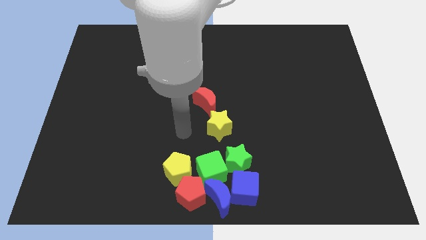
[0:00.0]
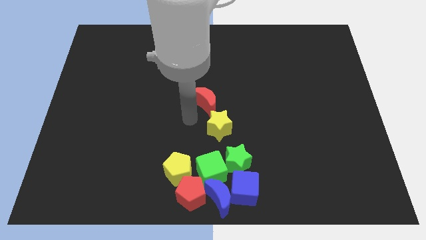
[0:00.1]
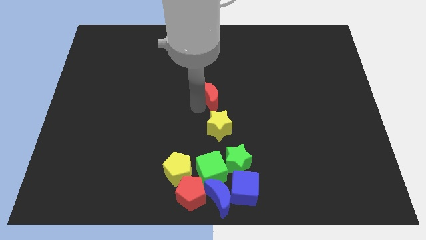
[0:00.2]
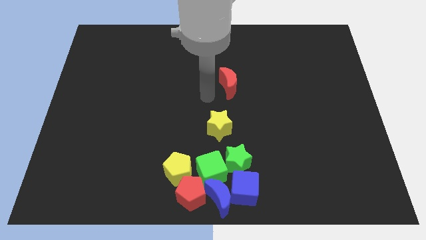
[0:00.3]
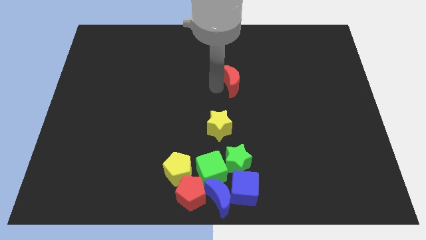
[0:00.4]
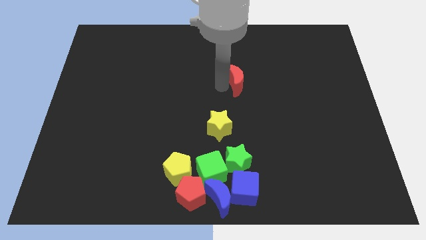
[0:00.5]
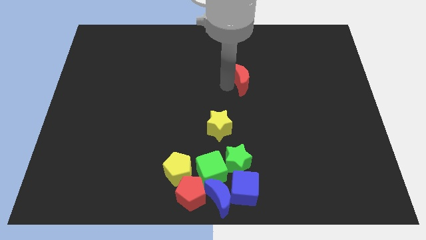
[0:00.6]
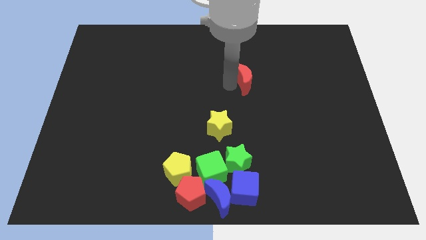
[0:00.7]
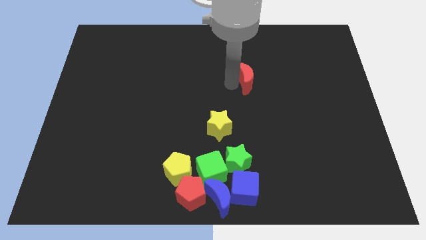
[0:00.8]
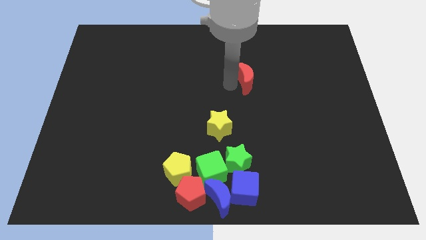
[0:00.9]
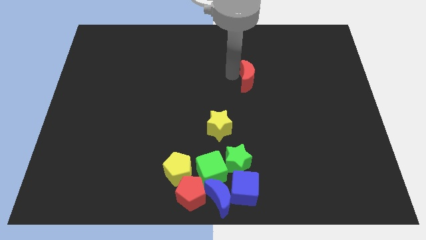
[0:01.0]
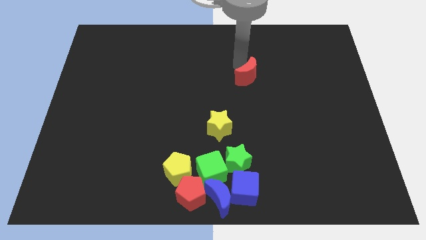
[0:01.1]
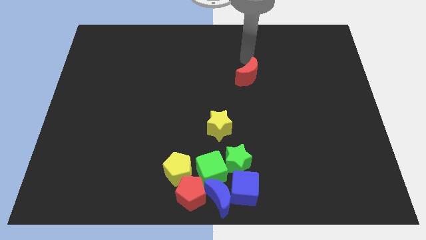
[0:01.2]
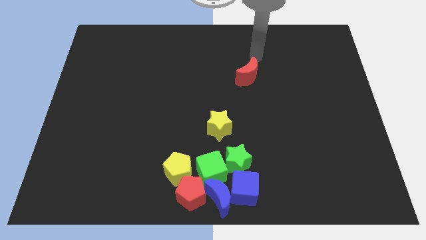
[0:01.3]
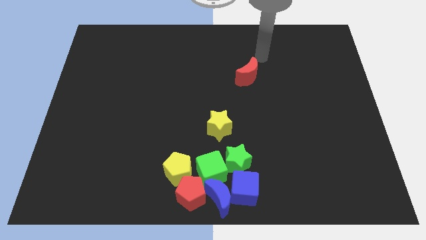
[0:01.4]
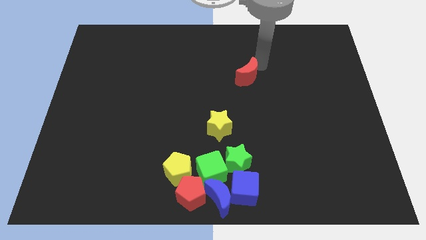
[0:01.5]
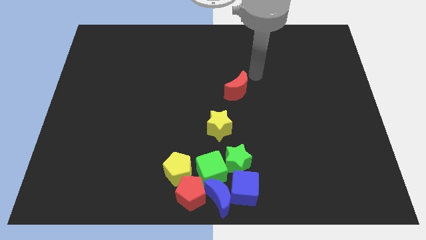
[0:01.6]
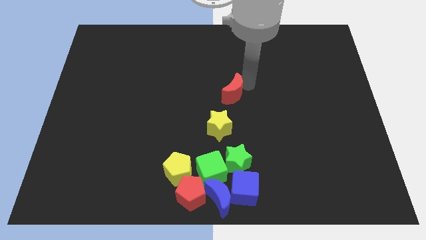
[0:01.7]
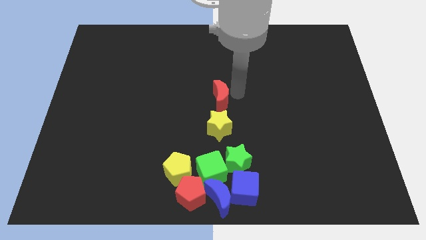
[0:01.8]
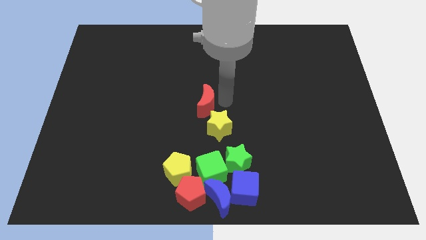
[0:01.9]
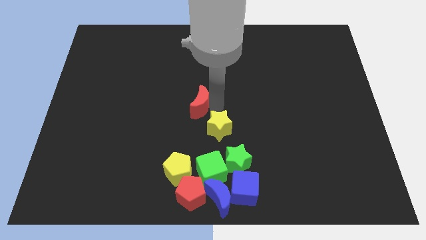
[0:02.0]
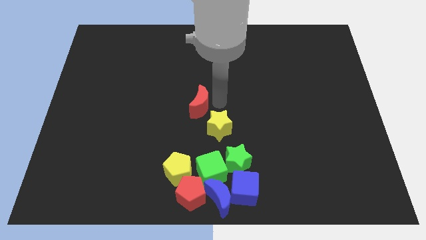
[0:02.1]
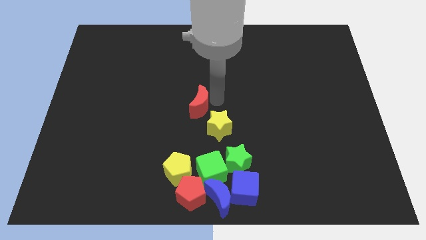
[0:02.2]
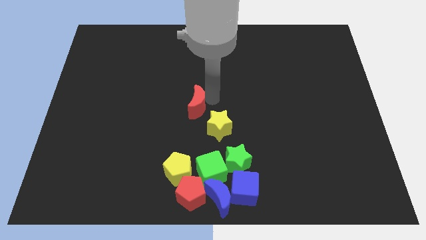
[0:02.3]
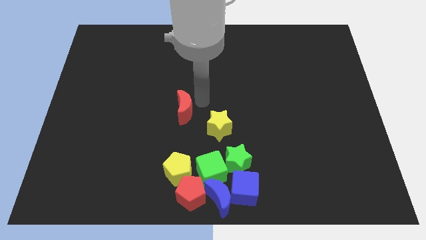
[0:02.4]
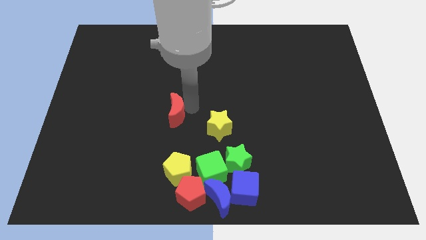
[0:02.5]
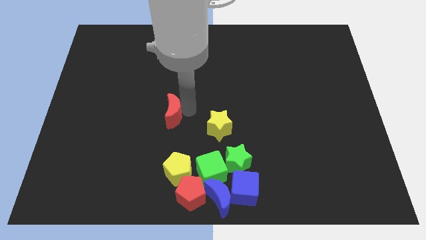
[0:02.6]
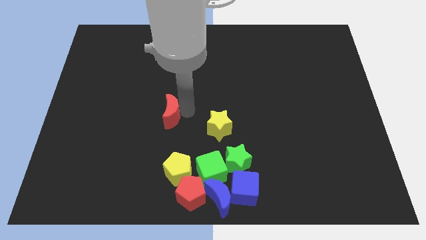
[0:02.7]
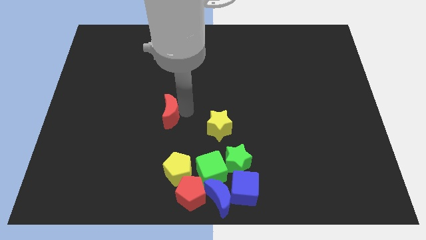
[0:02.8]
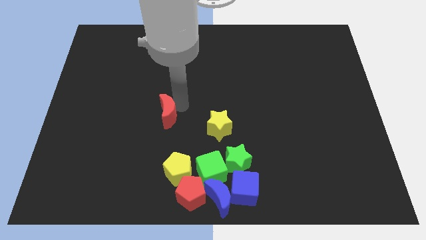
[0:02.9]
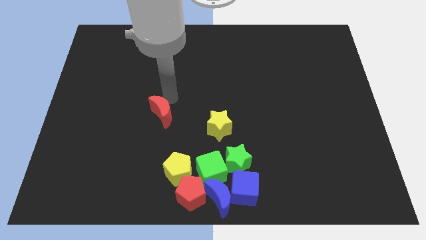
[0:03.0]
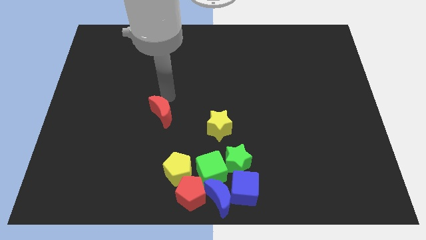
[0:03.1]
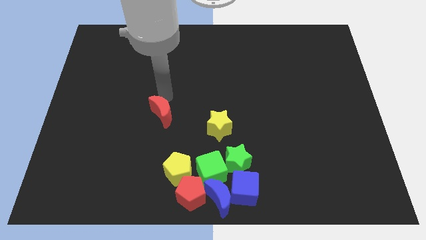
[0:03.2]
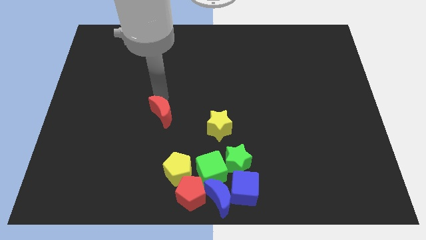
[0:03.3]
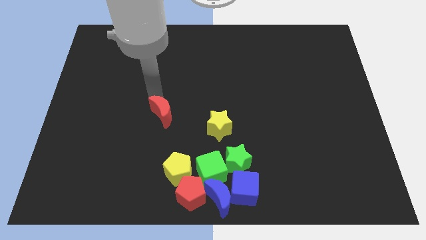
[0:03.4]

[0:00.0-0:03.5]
place the red crescent at the top side of the yellow pentagon

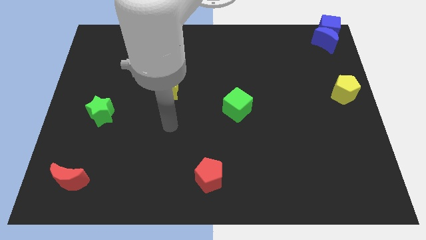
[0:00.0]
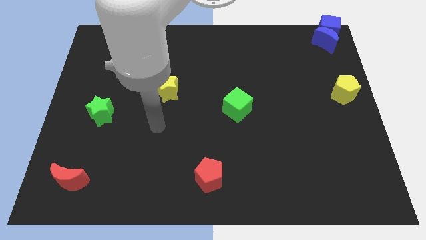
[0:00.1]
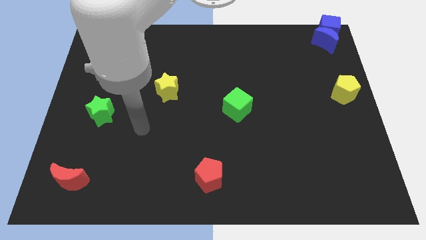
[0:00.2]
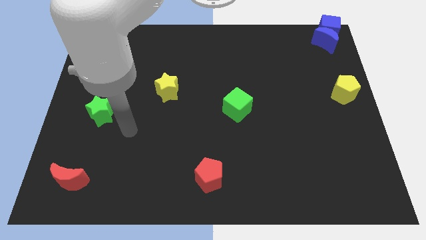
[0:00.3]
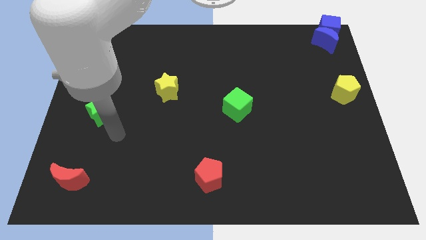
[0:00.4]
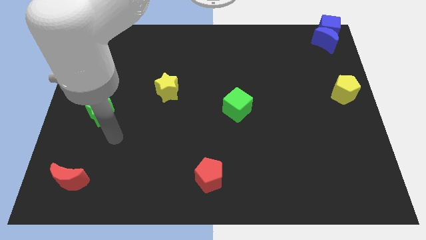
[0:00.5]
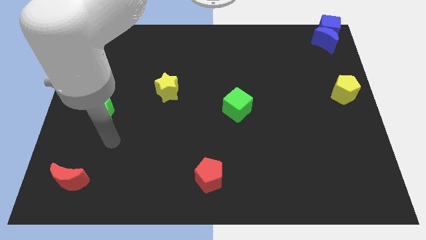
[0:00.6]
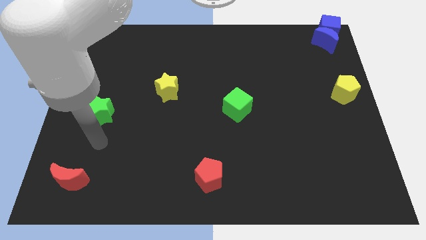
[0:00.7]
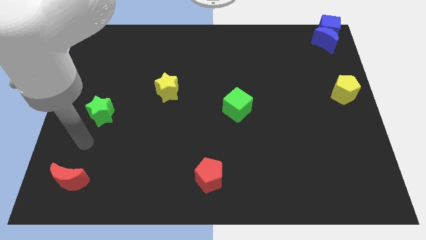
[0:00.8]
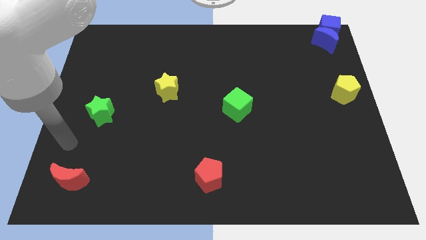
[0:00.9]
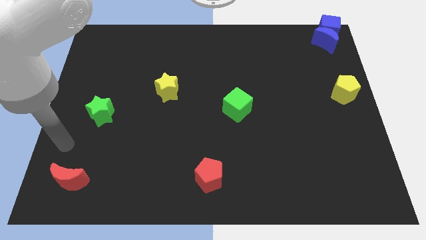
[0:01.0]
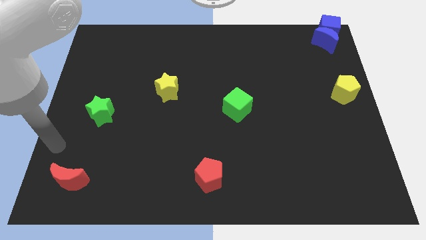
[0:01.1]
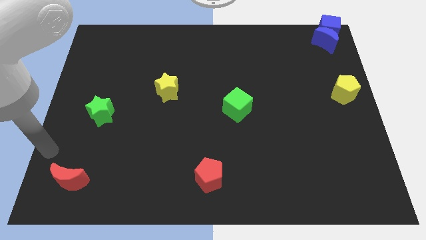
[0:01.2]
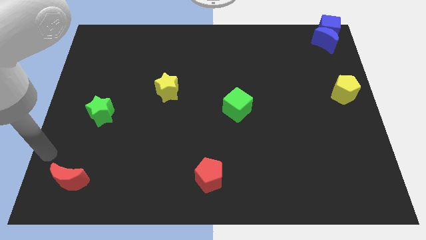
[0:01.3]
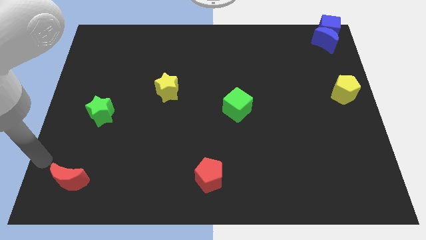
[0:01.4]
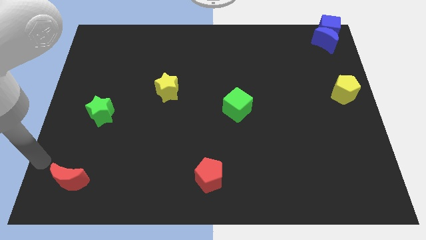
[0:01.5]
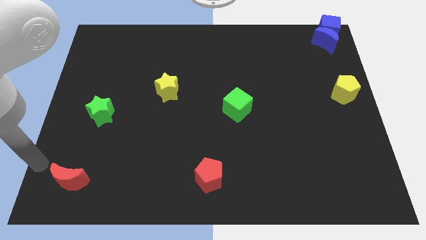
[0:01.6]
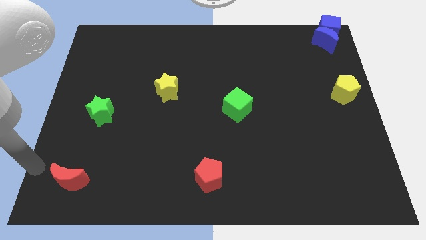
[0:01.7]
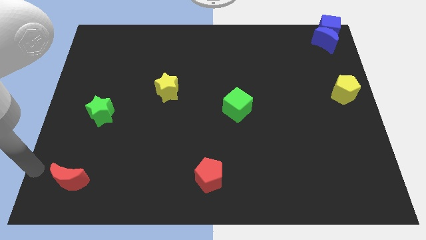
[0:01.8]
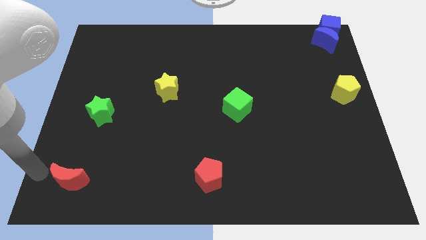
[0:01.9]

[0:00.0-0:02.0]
move your arm to the left of red moon

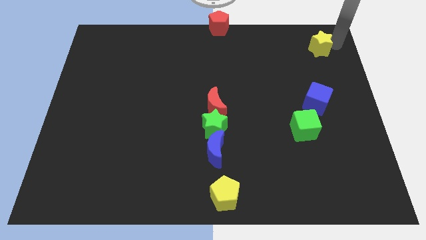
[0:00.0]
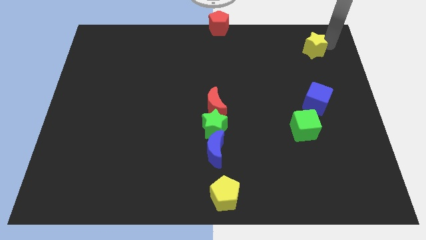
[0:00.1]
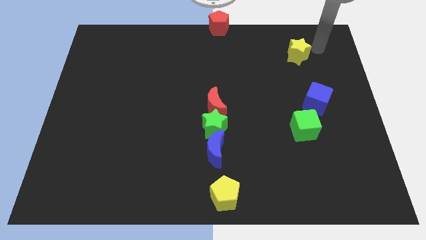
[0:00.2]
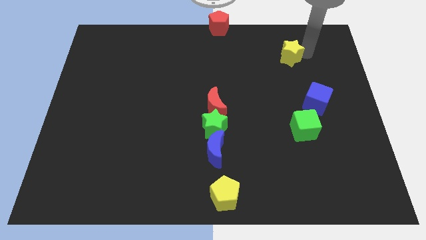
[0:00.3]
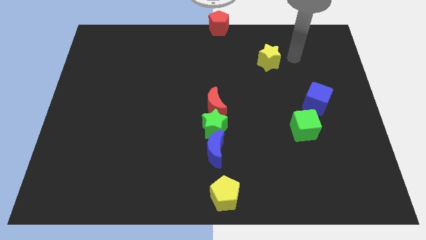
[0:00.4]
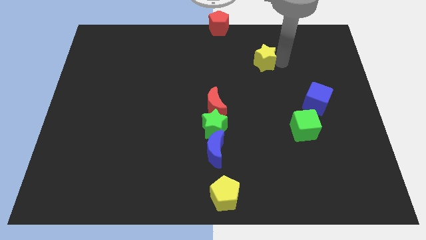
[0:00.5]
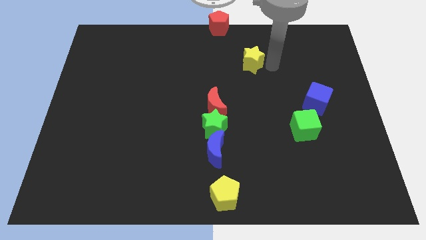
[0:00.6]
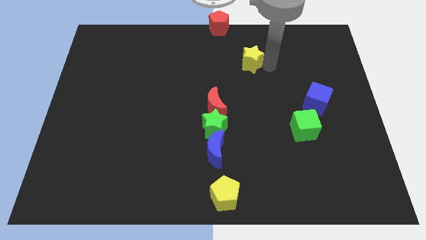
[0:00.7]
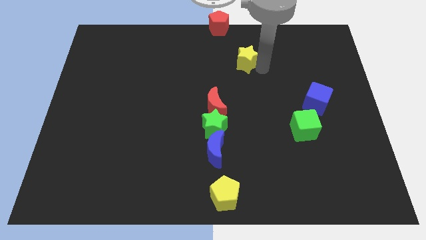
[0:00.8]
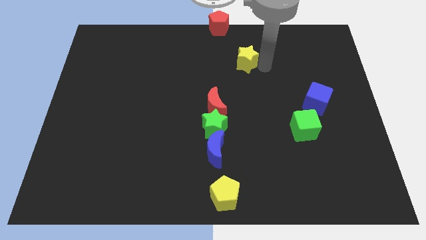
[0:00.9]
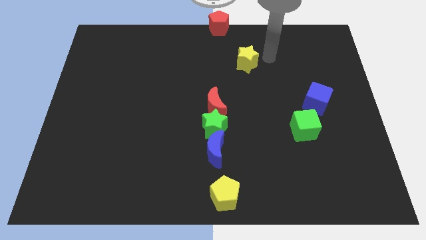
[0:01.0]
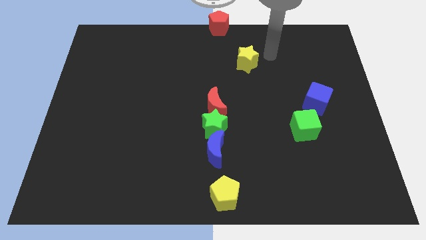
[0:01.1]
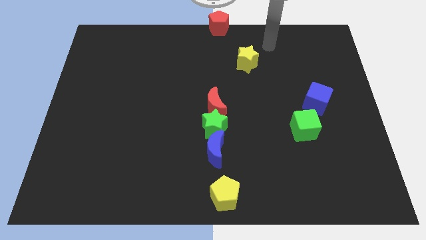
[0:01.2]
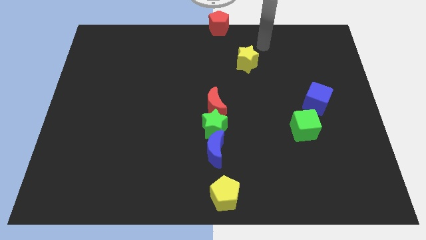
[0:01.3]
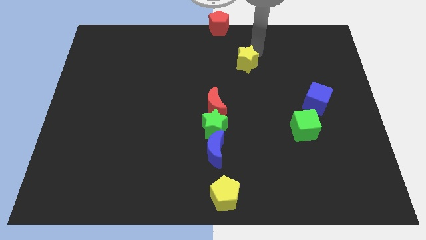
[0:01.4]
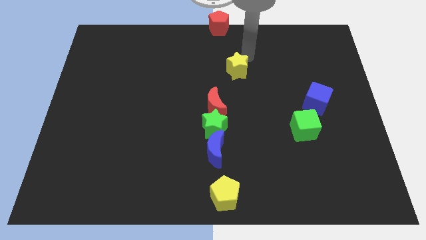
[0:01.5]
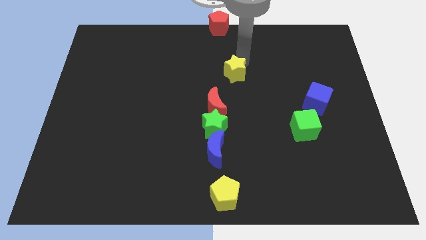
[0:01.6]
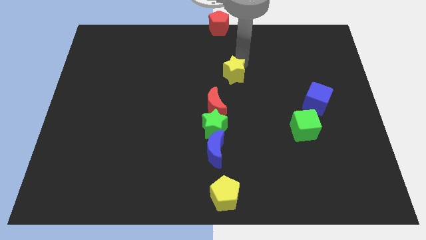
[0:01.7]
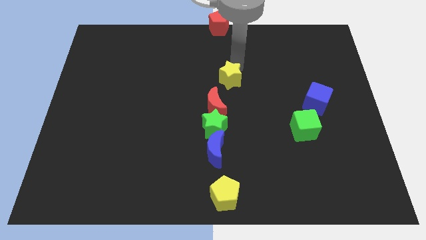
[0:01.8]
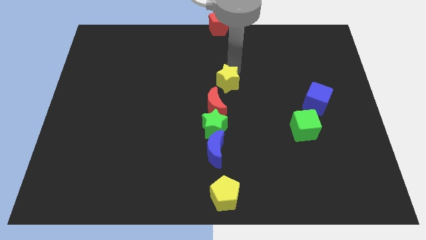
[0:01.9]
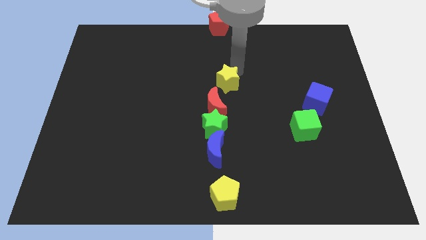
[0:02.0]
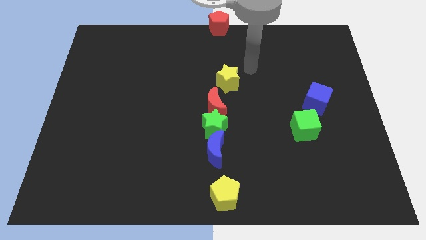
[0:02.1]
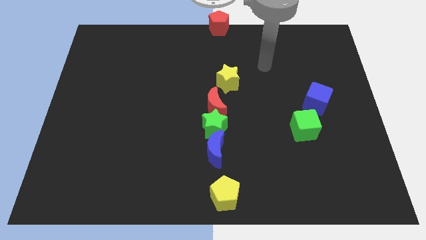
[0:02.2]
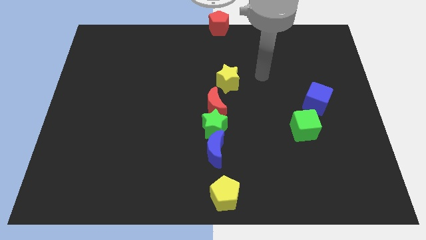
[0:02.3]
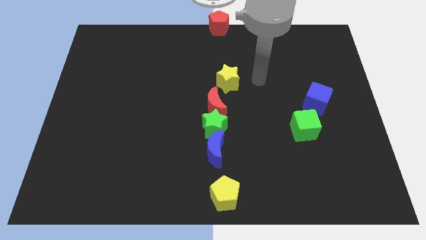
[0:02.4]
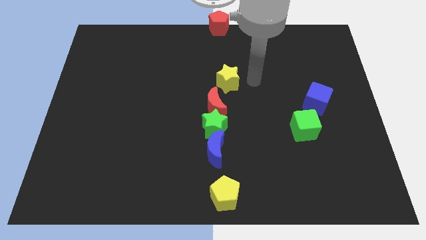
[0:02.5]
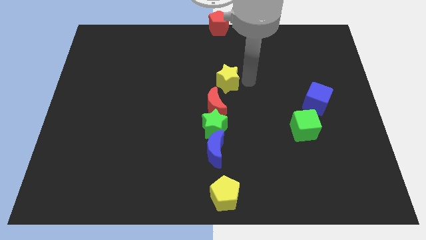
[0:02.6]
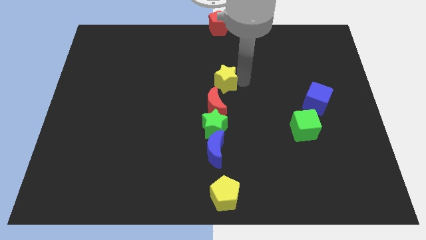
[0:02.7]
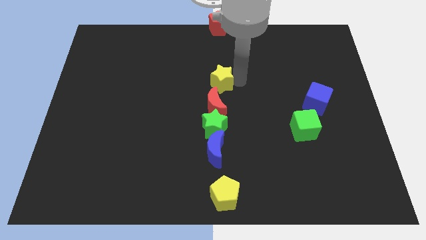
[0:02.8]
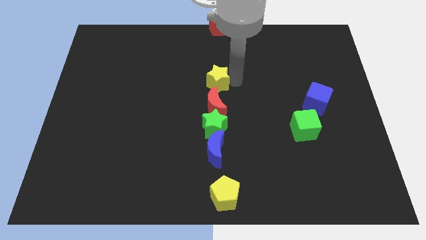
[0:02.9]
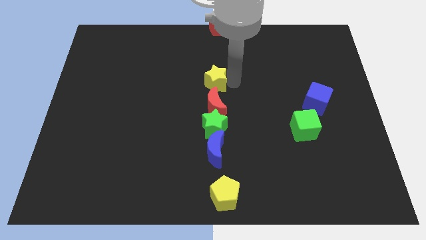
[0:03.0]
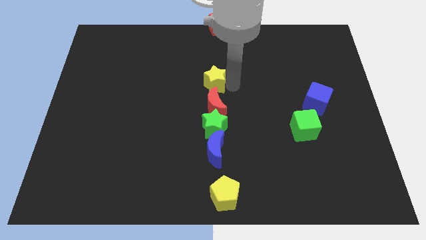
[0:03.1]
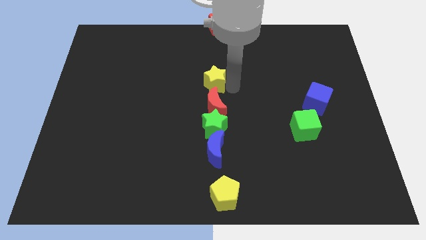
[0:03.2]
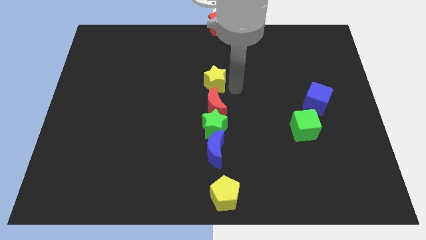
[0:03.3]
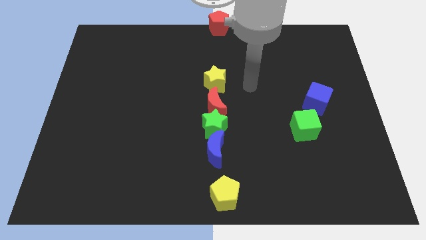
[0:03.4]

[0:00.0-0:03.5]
drag the yellow star above the red moon

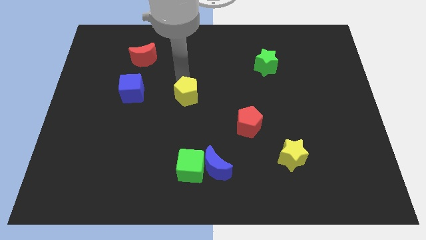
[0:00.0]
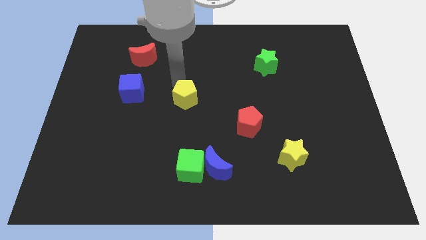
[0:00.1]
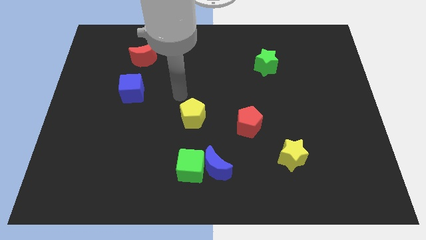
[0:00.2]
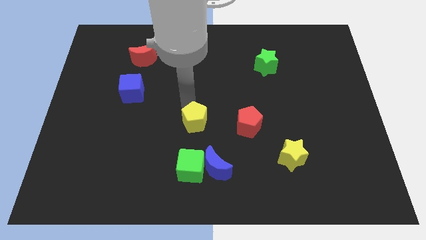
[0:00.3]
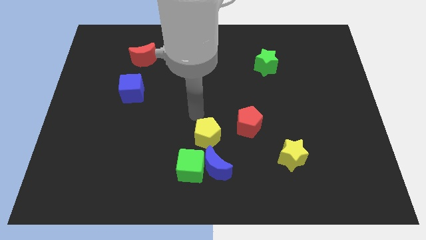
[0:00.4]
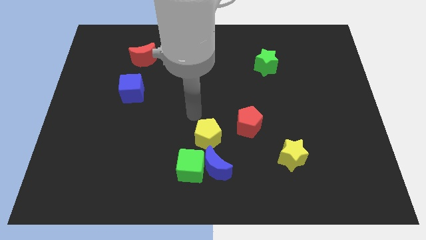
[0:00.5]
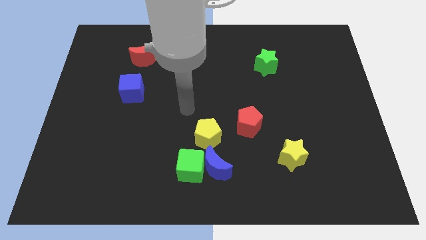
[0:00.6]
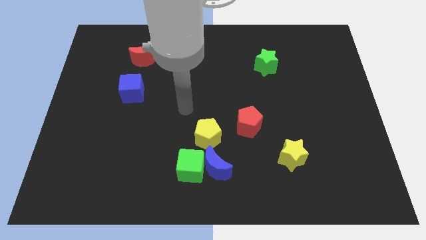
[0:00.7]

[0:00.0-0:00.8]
push yellow pentagon towards blue moon
